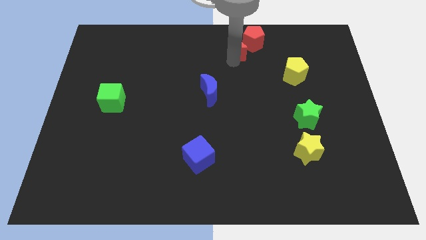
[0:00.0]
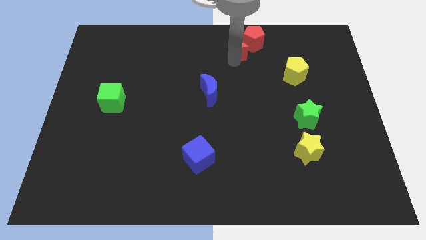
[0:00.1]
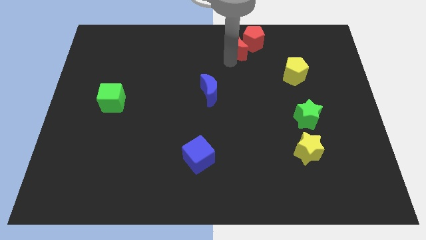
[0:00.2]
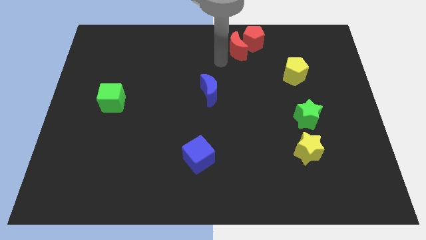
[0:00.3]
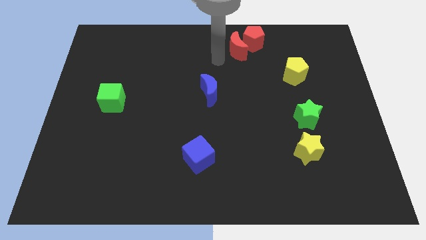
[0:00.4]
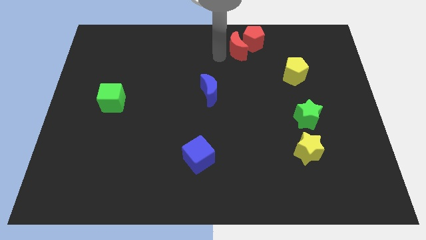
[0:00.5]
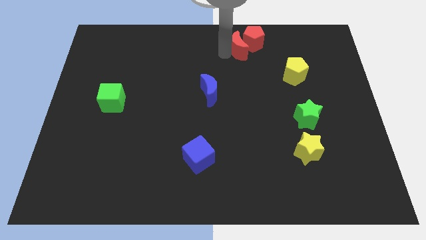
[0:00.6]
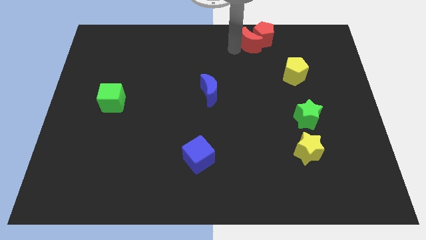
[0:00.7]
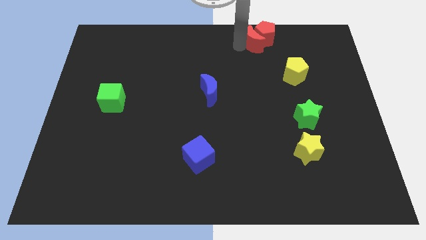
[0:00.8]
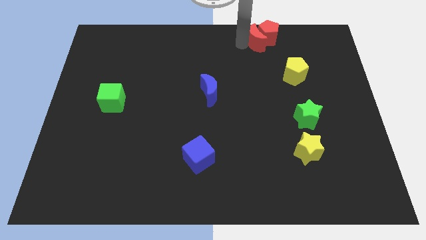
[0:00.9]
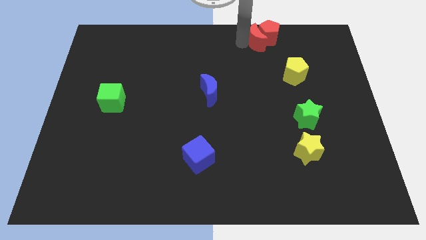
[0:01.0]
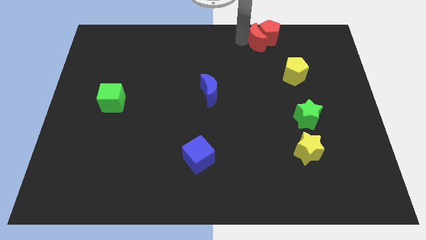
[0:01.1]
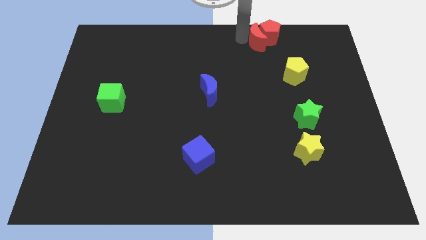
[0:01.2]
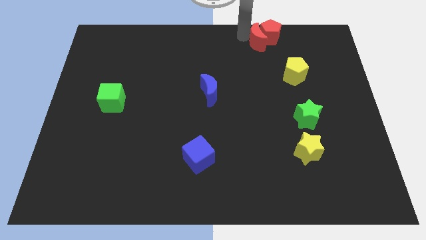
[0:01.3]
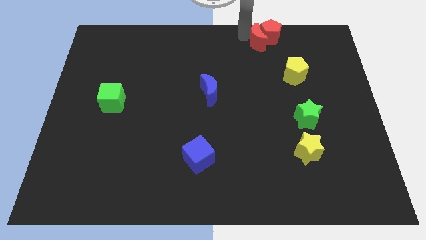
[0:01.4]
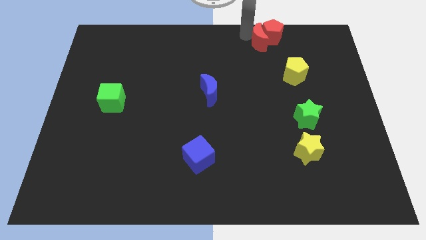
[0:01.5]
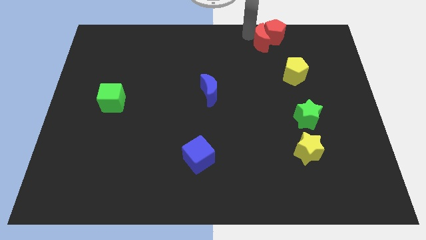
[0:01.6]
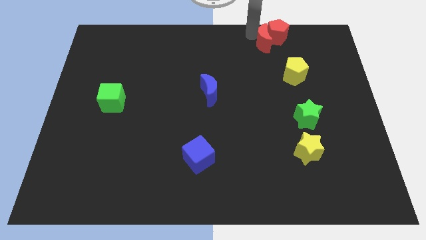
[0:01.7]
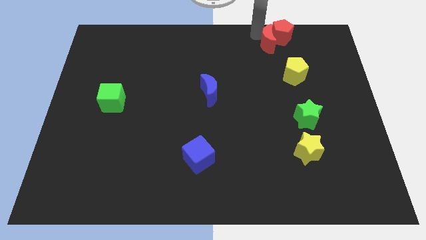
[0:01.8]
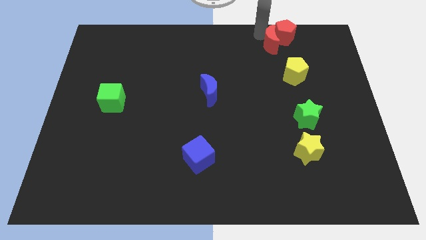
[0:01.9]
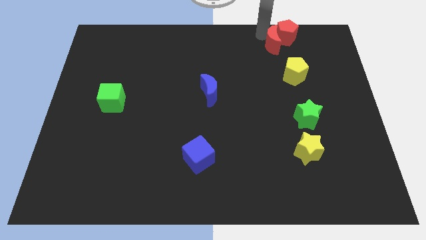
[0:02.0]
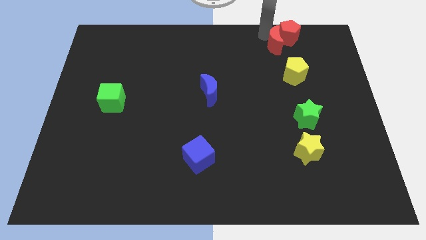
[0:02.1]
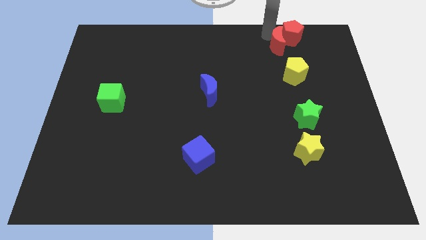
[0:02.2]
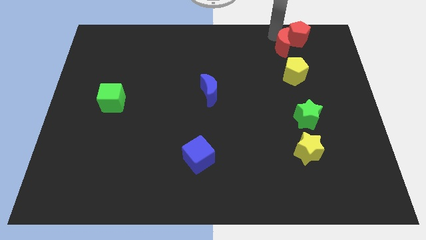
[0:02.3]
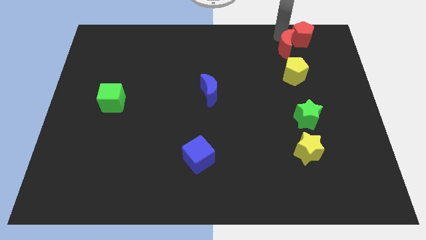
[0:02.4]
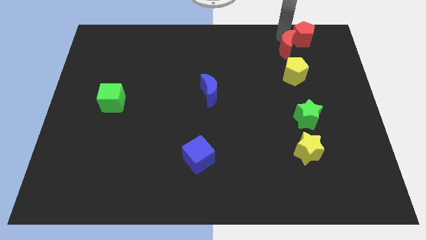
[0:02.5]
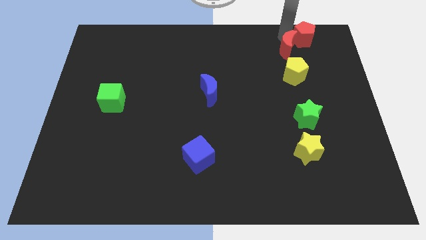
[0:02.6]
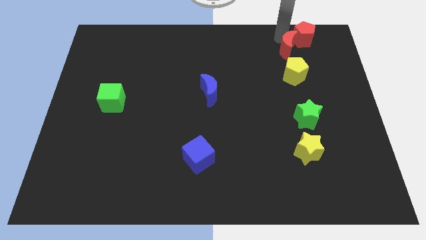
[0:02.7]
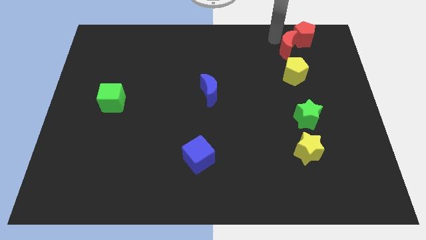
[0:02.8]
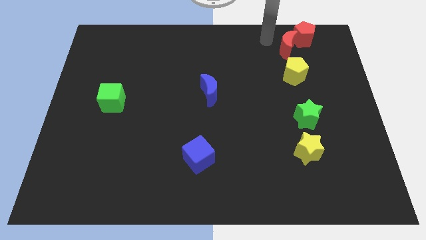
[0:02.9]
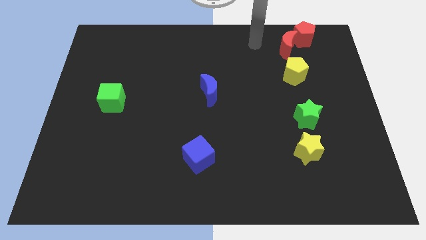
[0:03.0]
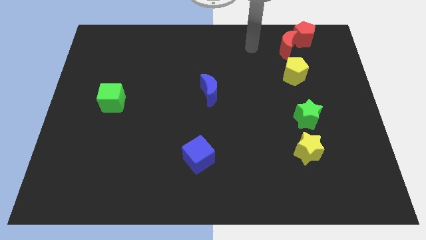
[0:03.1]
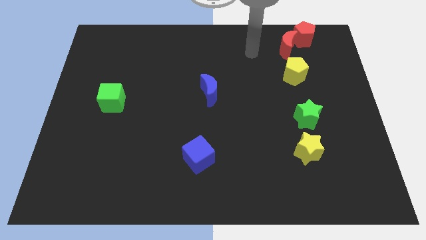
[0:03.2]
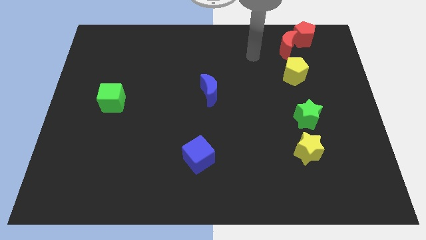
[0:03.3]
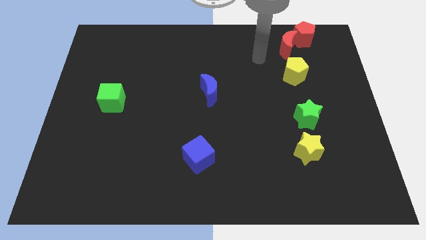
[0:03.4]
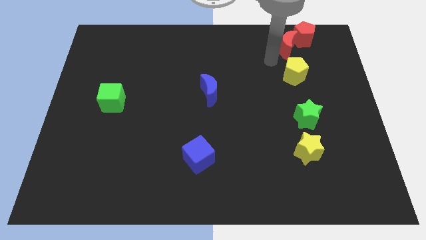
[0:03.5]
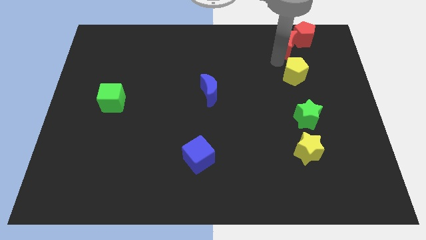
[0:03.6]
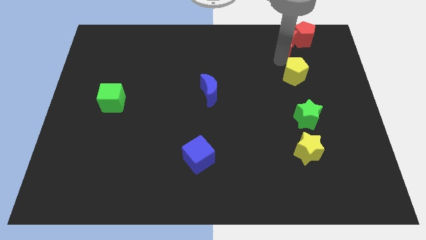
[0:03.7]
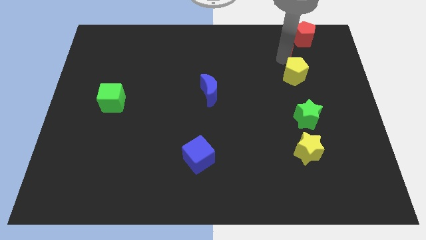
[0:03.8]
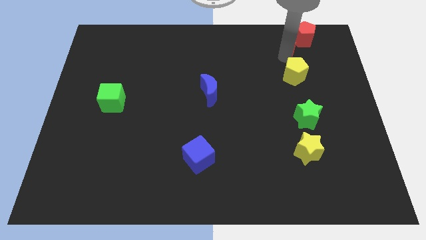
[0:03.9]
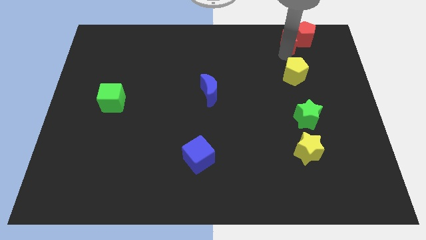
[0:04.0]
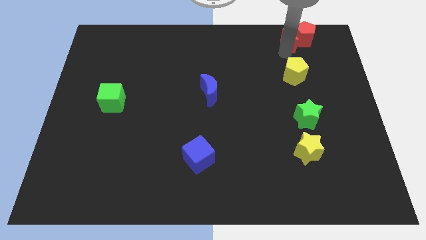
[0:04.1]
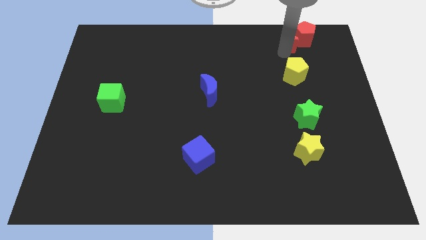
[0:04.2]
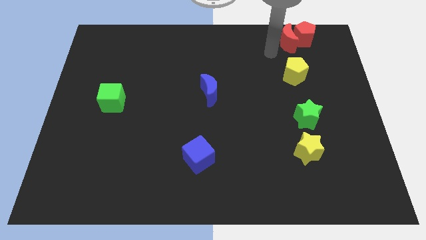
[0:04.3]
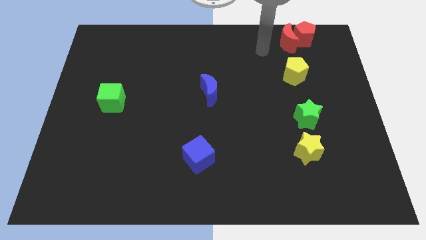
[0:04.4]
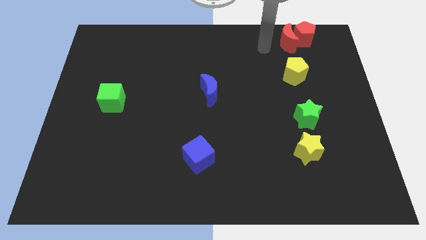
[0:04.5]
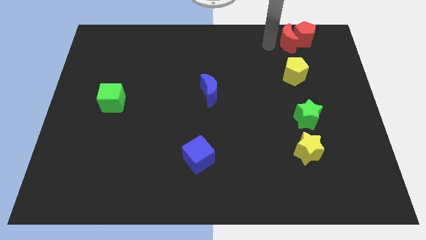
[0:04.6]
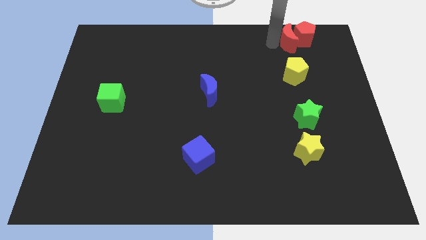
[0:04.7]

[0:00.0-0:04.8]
push the red crescent along with red pentagon above the yellow pentagon

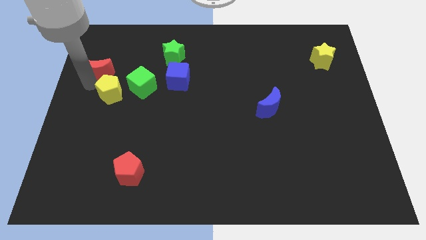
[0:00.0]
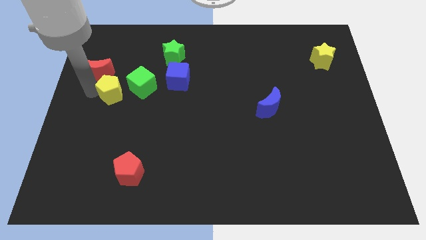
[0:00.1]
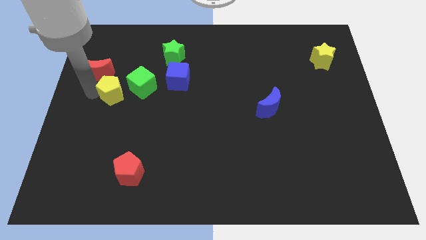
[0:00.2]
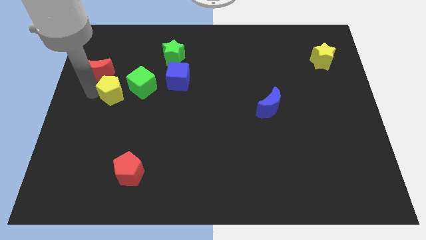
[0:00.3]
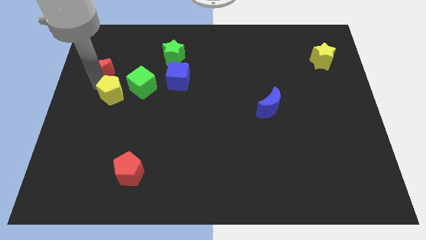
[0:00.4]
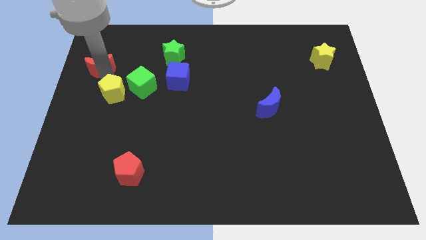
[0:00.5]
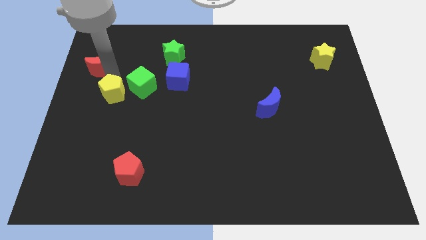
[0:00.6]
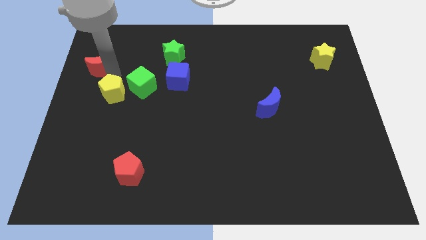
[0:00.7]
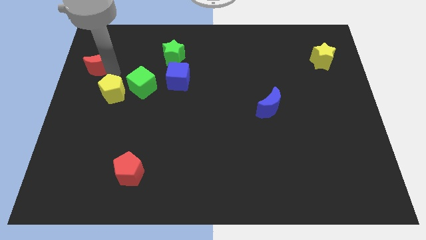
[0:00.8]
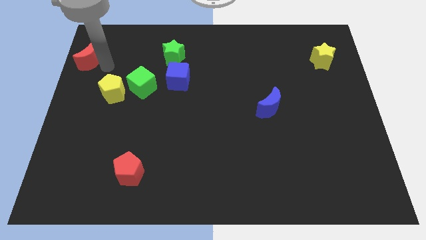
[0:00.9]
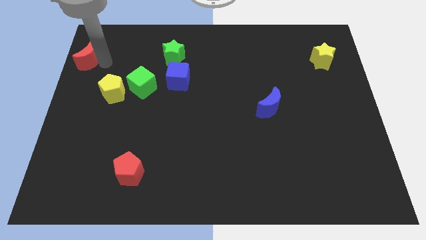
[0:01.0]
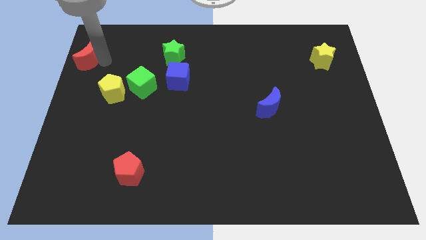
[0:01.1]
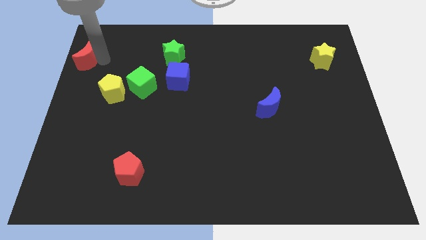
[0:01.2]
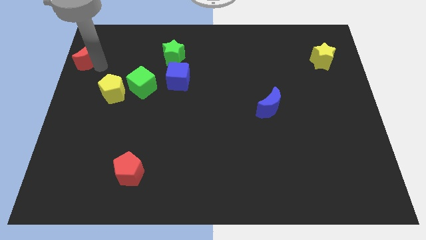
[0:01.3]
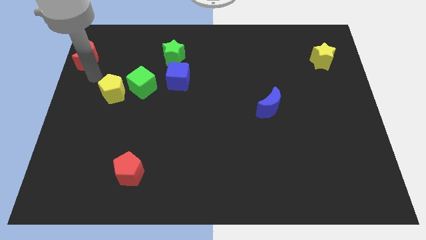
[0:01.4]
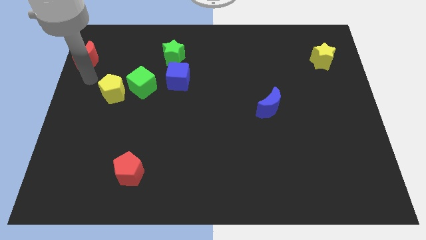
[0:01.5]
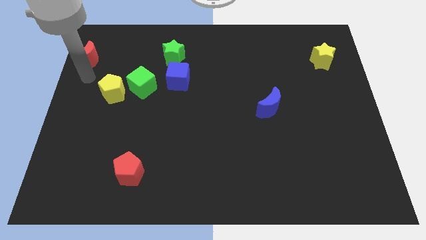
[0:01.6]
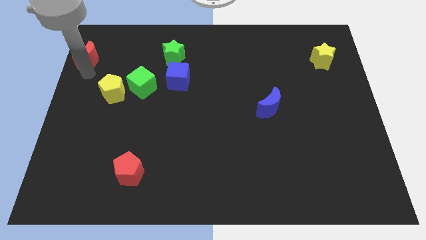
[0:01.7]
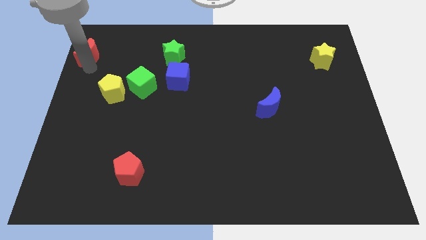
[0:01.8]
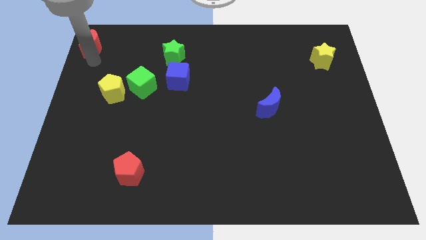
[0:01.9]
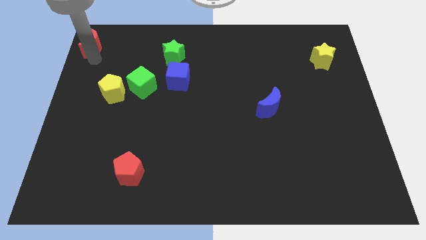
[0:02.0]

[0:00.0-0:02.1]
drag the red moon diagonal to the green cube

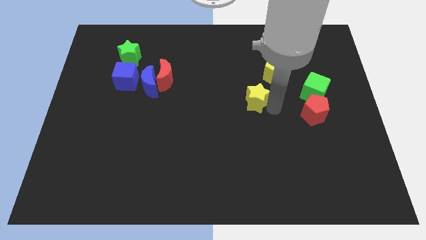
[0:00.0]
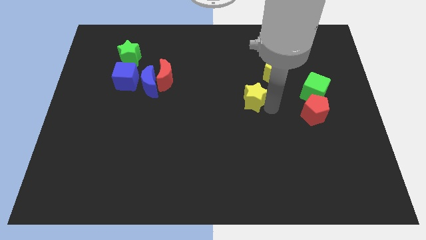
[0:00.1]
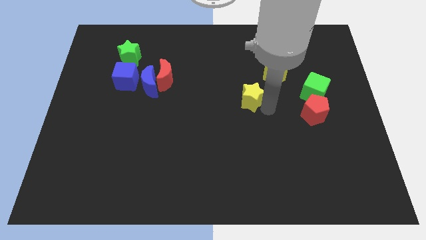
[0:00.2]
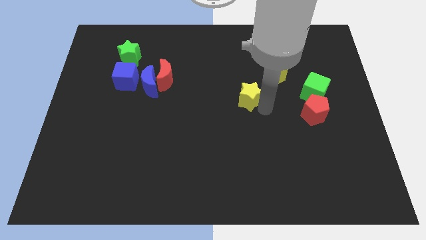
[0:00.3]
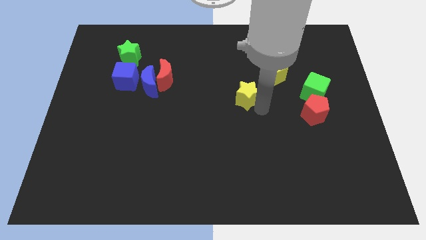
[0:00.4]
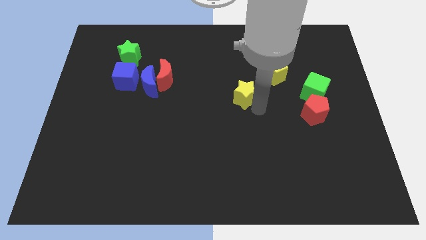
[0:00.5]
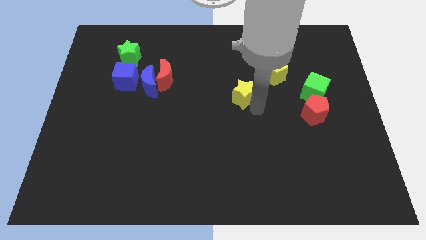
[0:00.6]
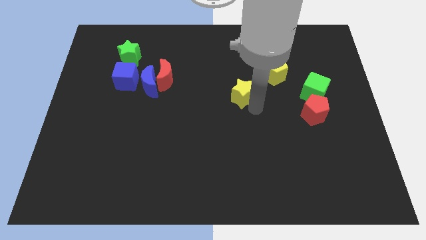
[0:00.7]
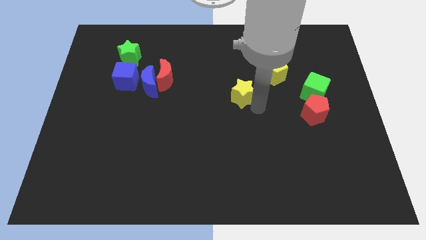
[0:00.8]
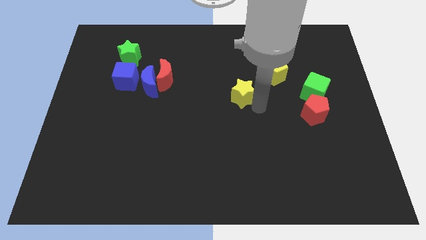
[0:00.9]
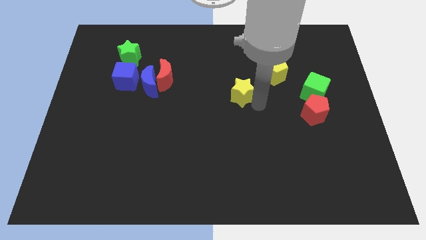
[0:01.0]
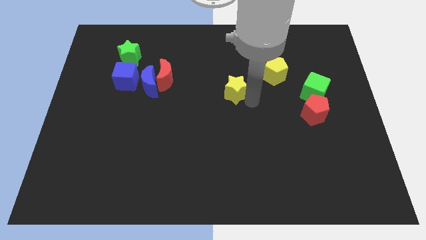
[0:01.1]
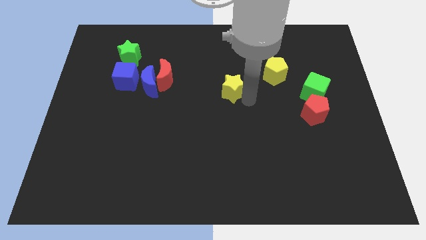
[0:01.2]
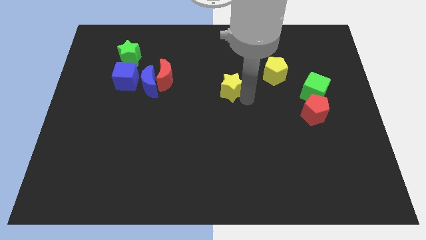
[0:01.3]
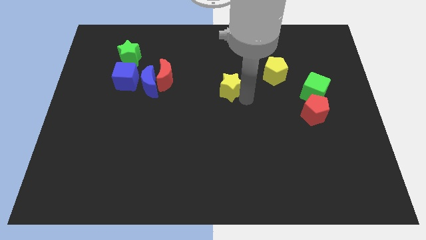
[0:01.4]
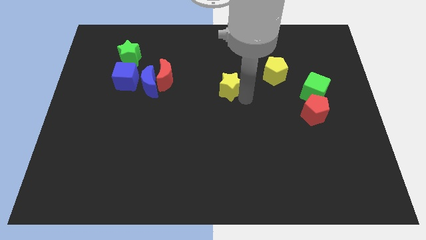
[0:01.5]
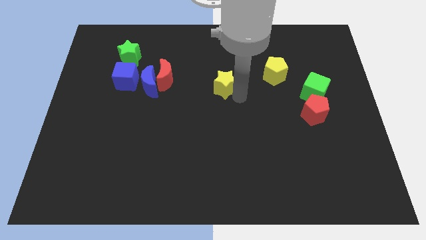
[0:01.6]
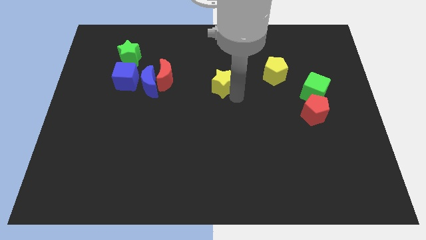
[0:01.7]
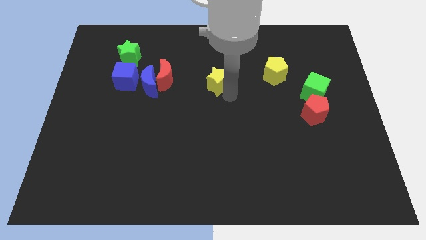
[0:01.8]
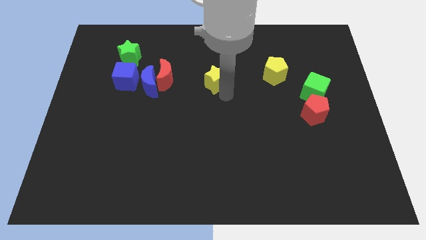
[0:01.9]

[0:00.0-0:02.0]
slide the yellow star diagonally bottom left to the yellow pentagon

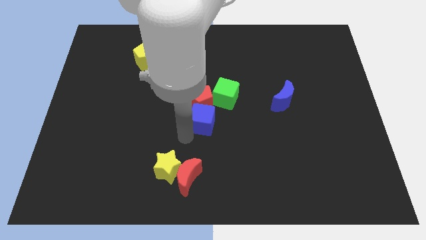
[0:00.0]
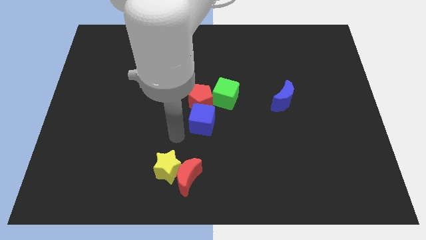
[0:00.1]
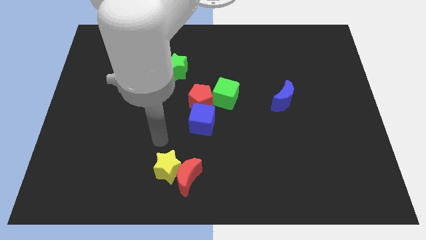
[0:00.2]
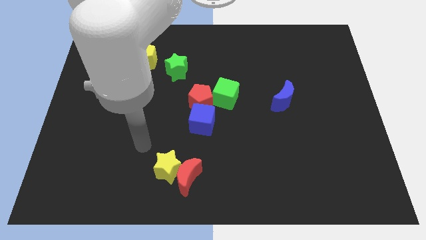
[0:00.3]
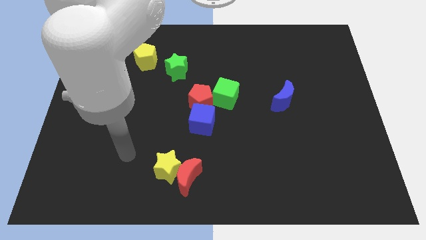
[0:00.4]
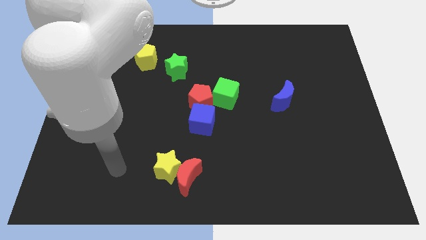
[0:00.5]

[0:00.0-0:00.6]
move your arm to the left of the yellow star
